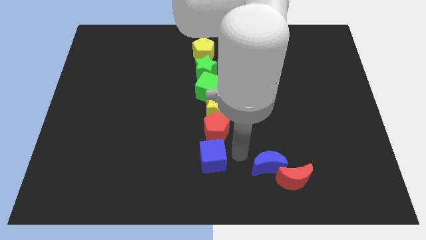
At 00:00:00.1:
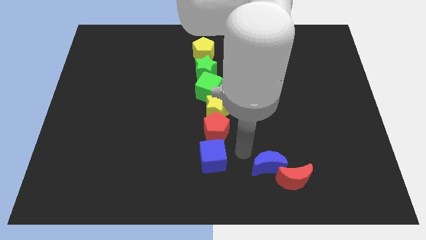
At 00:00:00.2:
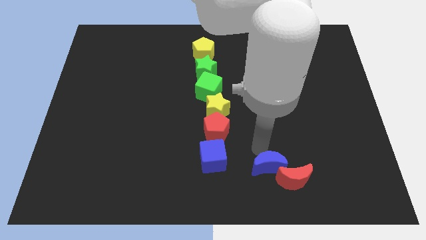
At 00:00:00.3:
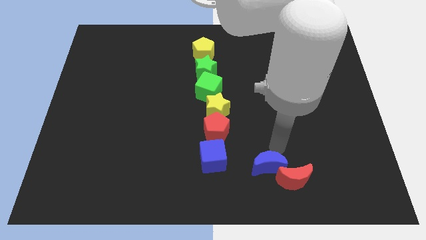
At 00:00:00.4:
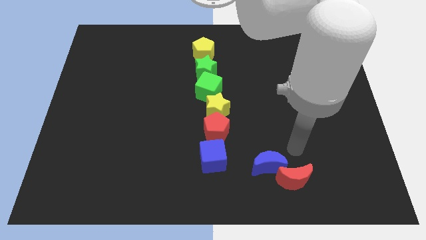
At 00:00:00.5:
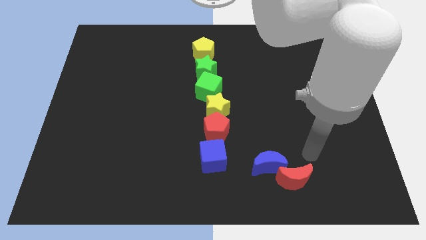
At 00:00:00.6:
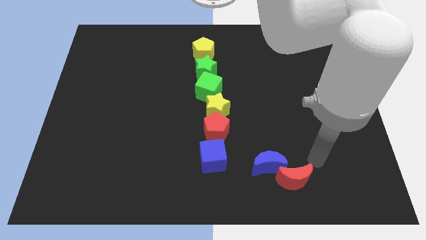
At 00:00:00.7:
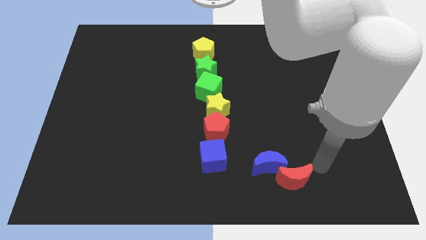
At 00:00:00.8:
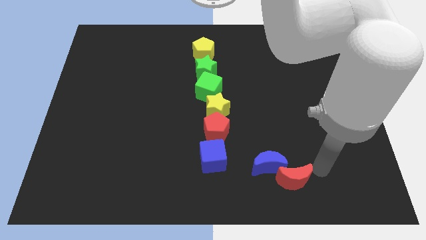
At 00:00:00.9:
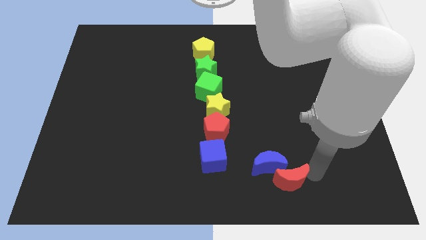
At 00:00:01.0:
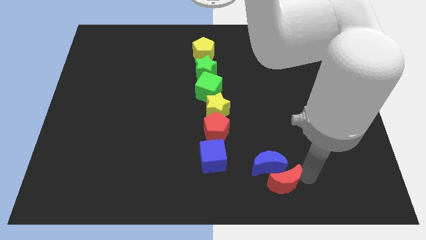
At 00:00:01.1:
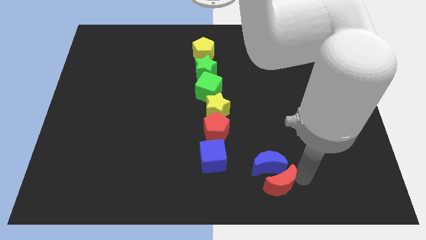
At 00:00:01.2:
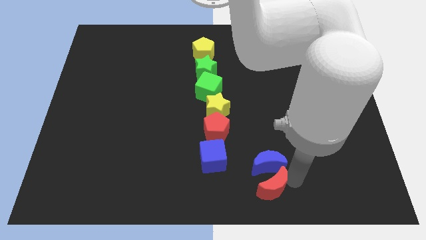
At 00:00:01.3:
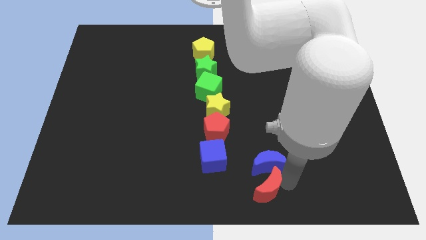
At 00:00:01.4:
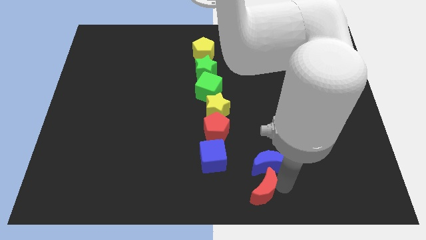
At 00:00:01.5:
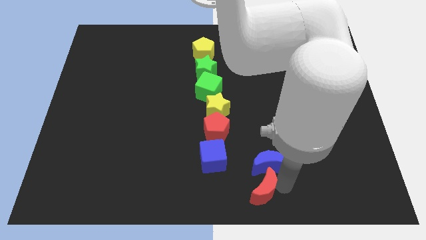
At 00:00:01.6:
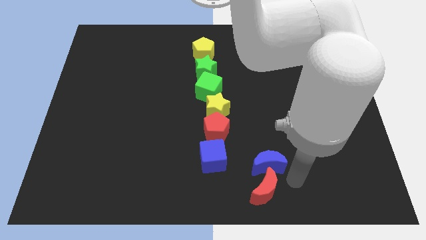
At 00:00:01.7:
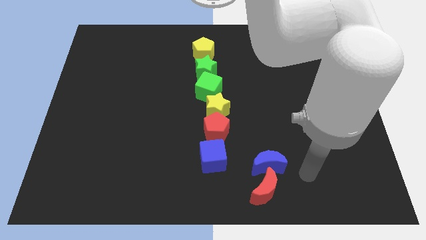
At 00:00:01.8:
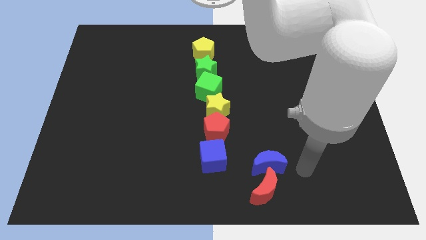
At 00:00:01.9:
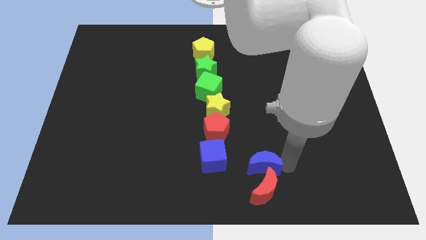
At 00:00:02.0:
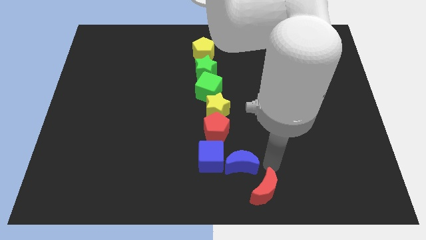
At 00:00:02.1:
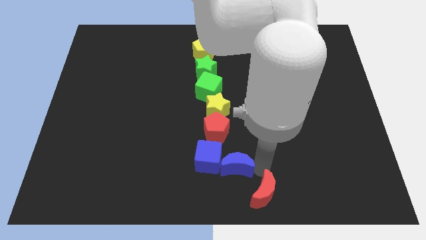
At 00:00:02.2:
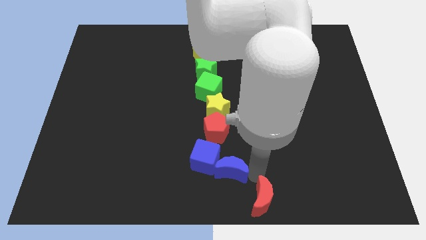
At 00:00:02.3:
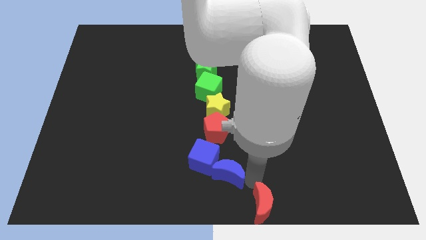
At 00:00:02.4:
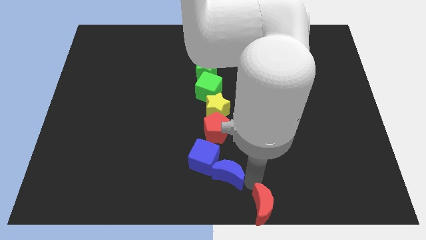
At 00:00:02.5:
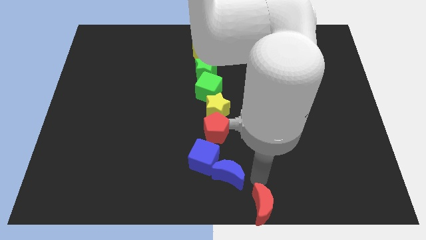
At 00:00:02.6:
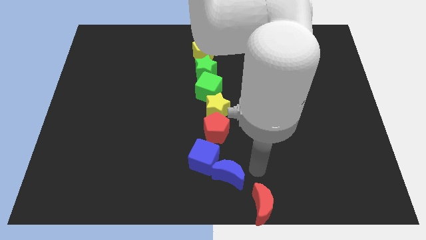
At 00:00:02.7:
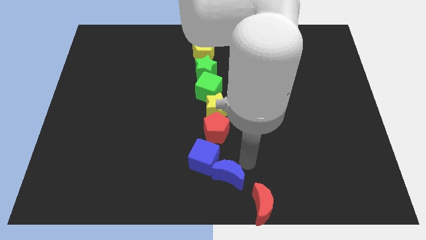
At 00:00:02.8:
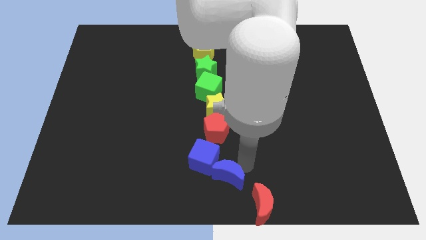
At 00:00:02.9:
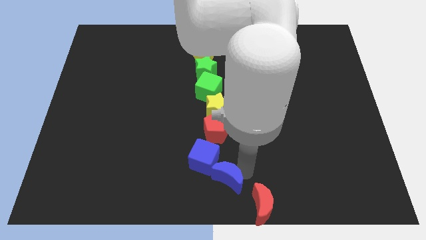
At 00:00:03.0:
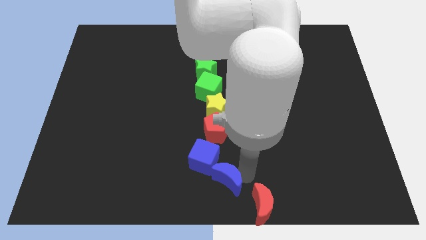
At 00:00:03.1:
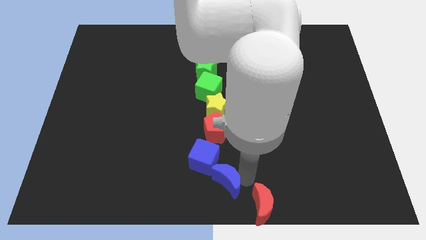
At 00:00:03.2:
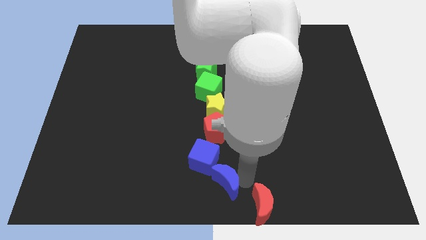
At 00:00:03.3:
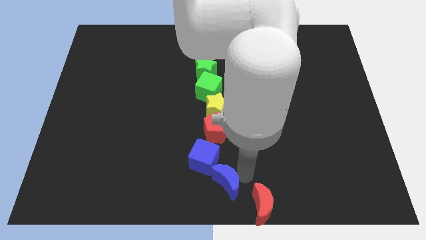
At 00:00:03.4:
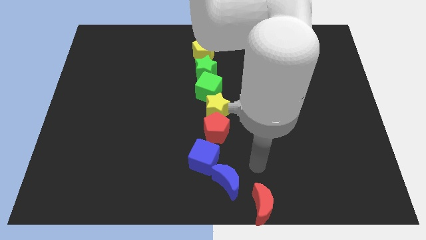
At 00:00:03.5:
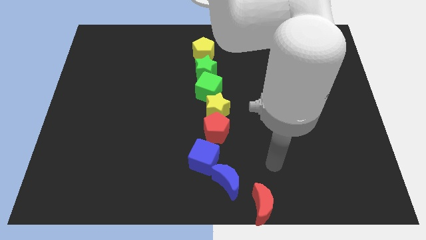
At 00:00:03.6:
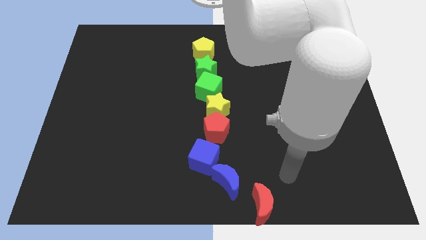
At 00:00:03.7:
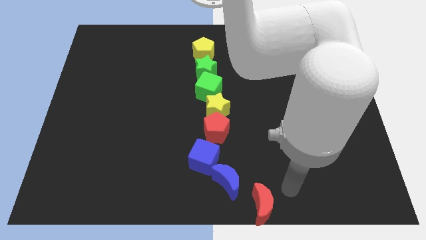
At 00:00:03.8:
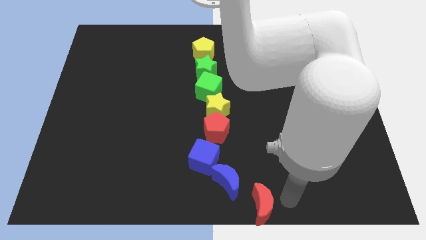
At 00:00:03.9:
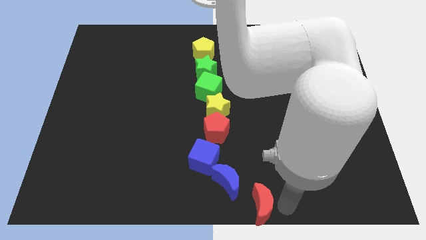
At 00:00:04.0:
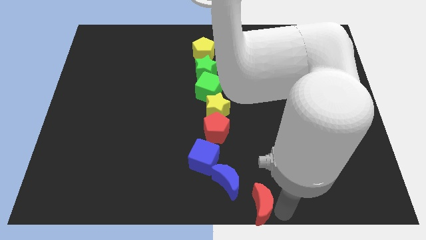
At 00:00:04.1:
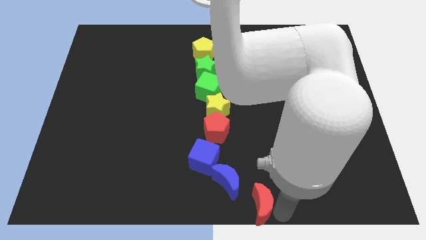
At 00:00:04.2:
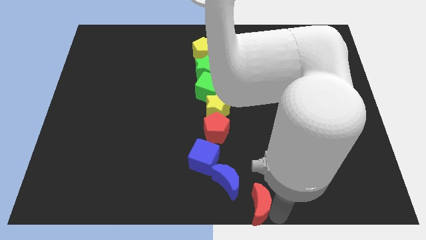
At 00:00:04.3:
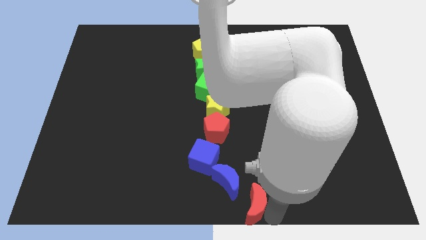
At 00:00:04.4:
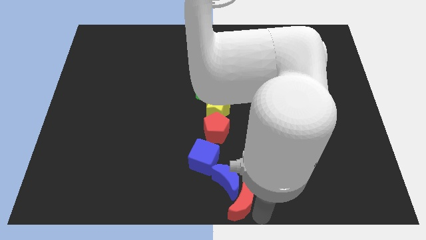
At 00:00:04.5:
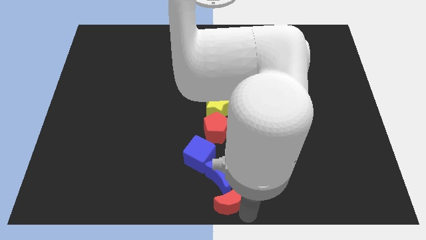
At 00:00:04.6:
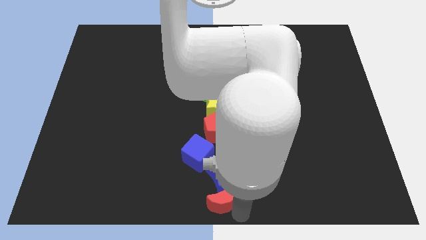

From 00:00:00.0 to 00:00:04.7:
move both crescents to the bottom of the blue cube

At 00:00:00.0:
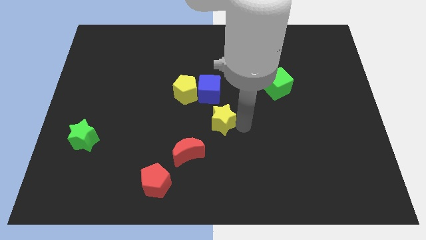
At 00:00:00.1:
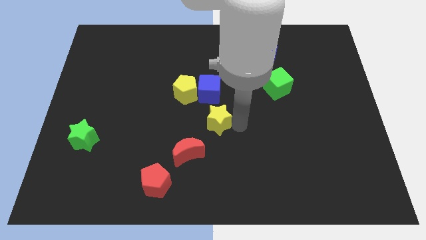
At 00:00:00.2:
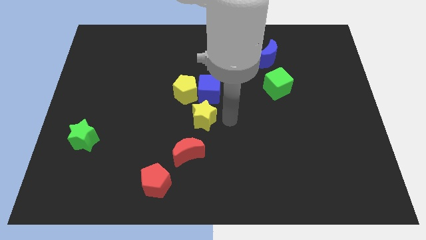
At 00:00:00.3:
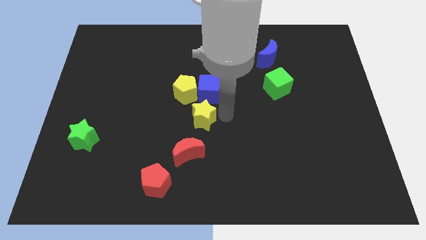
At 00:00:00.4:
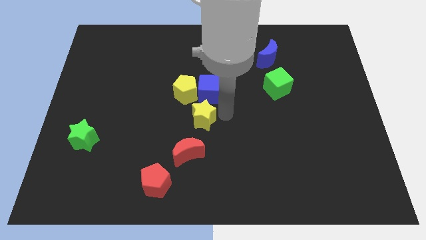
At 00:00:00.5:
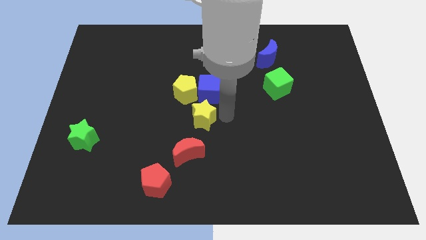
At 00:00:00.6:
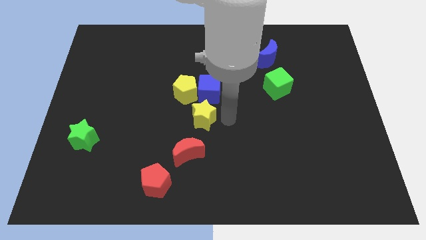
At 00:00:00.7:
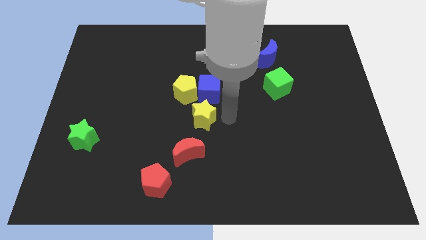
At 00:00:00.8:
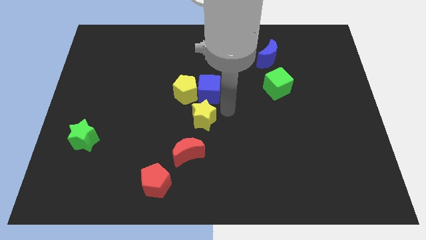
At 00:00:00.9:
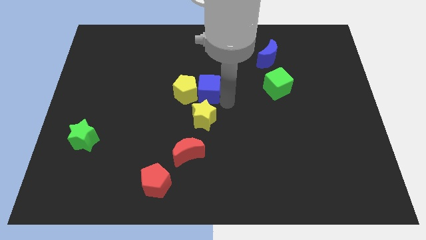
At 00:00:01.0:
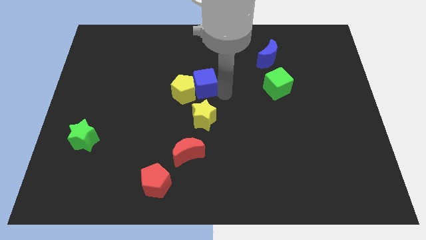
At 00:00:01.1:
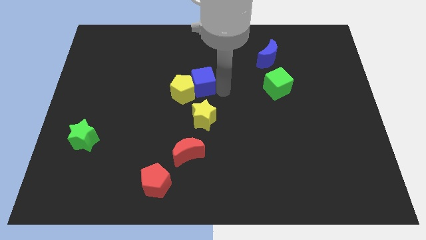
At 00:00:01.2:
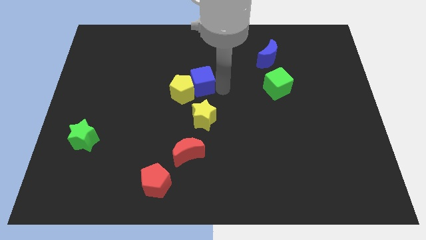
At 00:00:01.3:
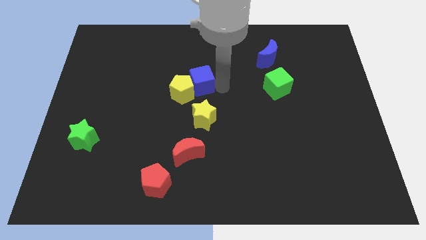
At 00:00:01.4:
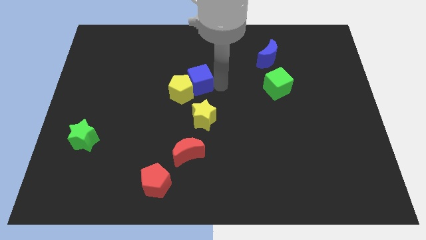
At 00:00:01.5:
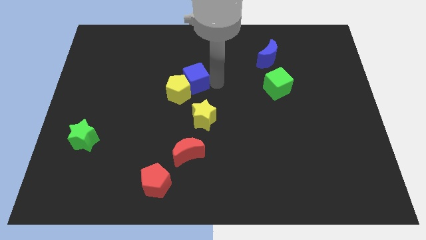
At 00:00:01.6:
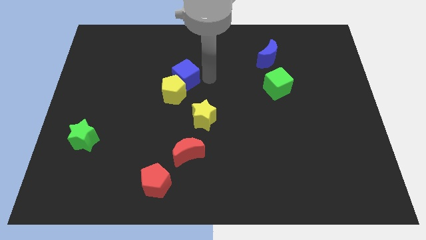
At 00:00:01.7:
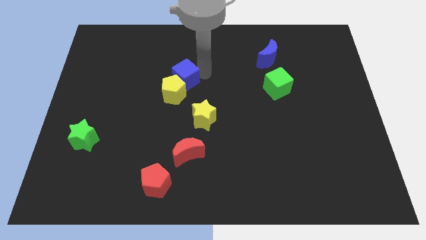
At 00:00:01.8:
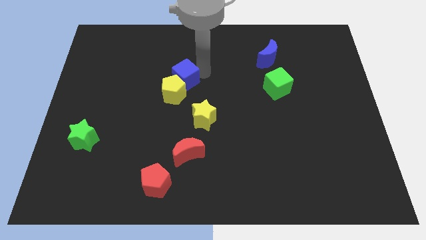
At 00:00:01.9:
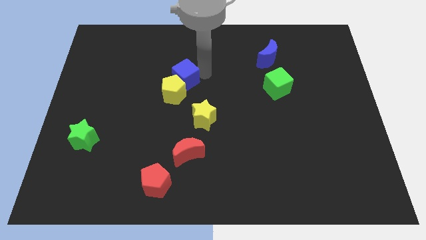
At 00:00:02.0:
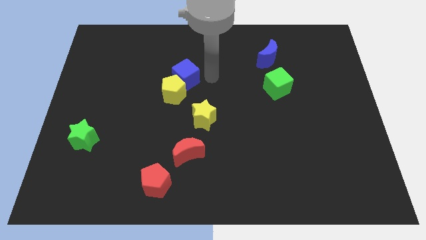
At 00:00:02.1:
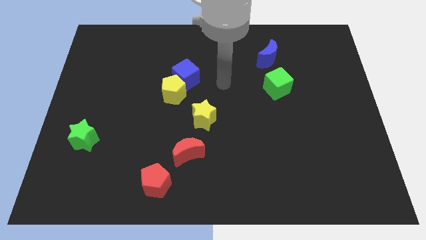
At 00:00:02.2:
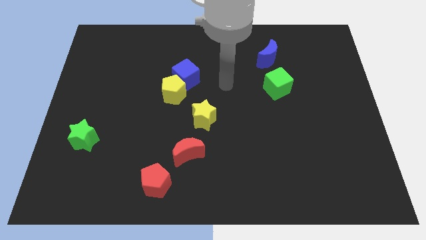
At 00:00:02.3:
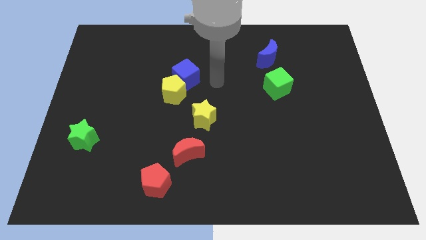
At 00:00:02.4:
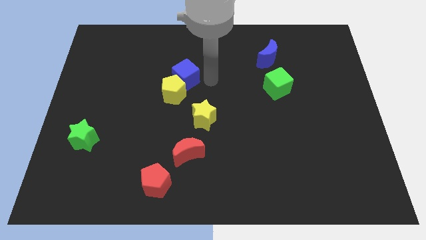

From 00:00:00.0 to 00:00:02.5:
move yellow pentagon with the blue cube to left

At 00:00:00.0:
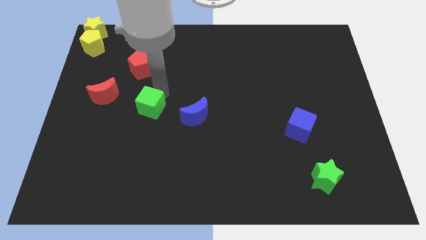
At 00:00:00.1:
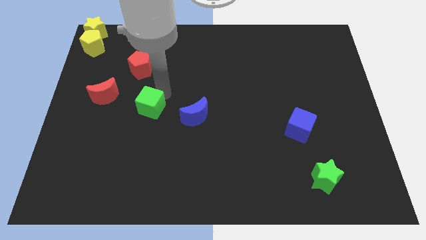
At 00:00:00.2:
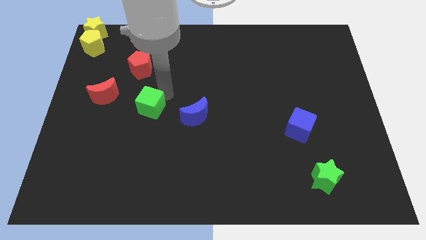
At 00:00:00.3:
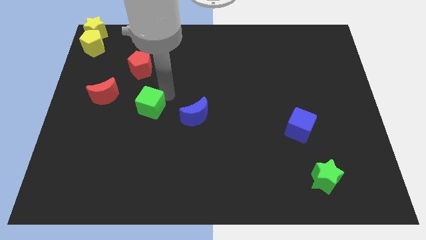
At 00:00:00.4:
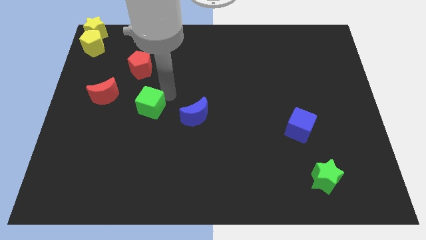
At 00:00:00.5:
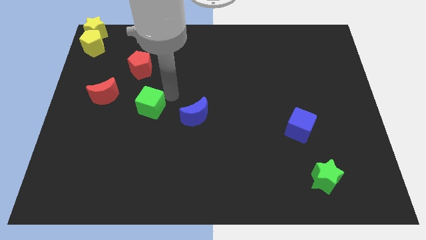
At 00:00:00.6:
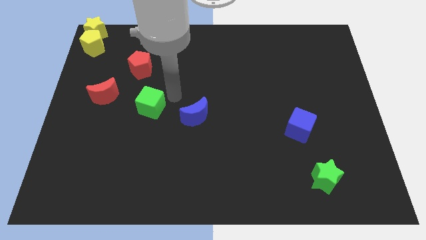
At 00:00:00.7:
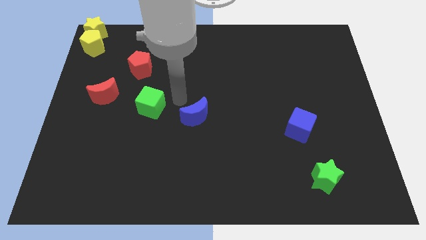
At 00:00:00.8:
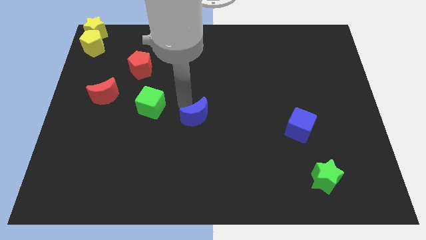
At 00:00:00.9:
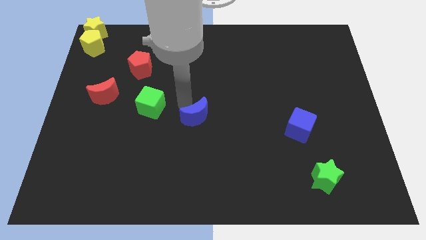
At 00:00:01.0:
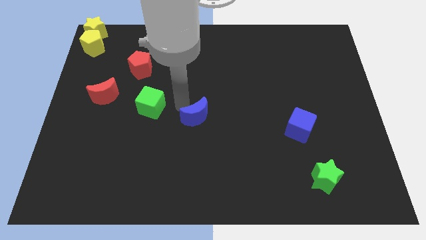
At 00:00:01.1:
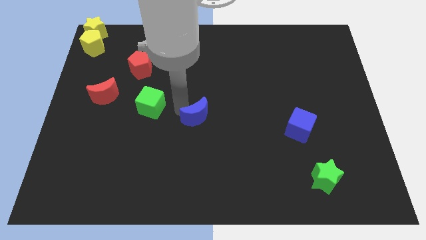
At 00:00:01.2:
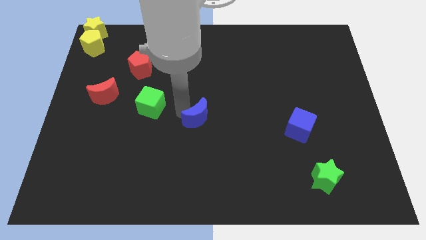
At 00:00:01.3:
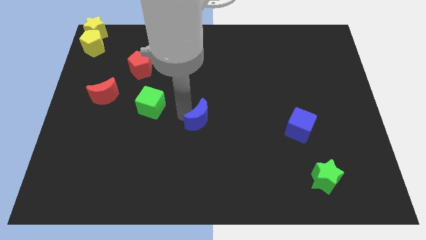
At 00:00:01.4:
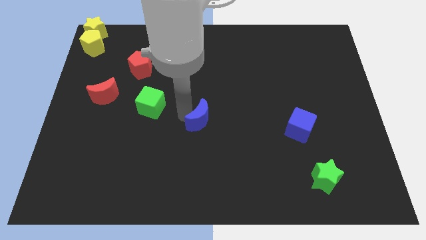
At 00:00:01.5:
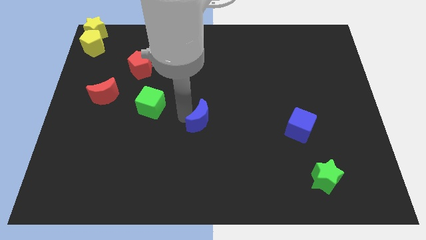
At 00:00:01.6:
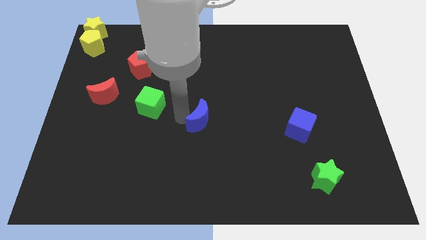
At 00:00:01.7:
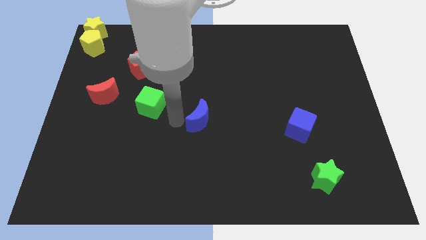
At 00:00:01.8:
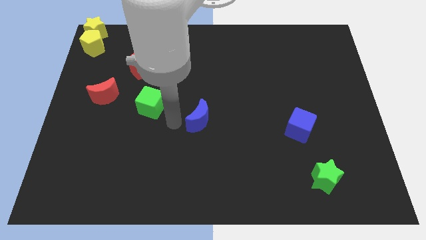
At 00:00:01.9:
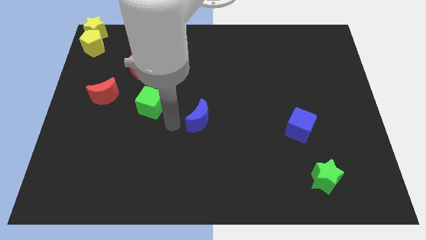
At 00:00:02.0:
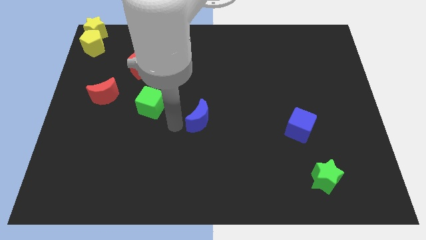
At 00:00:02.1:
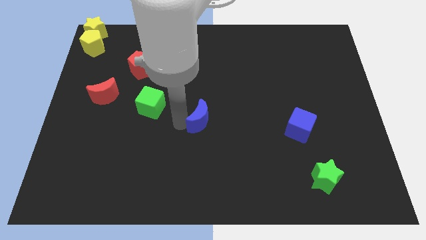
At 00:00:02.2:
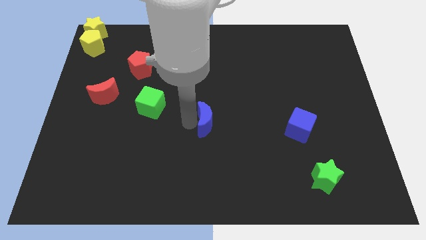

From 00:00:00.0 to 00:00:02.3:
slightly push the blue crescent with the arm
